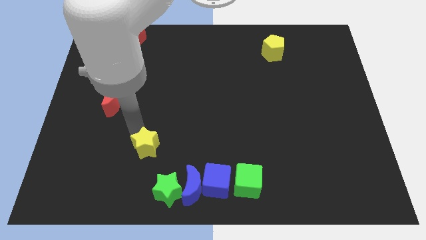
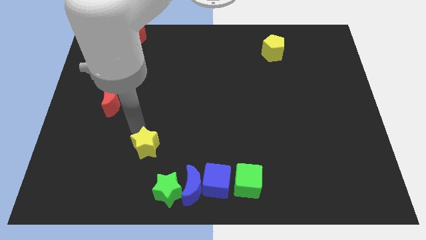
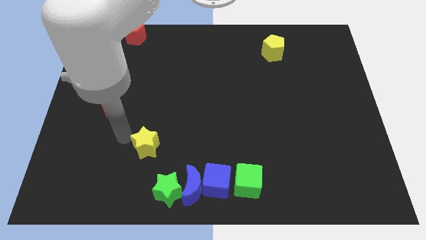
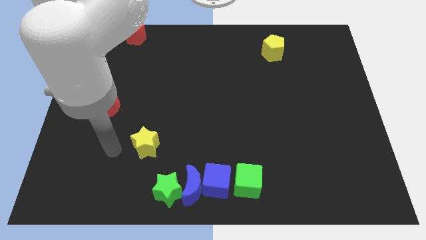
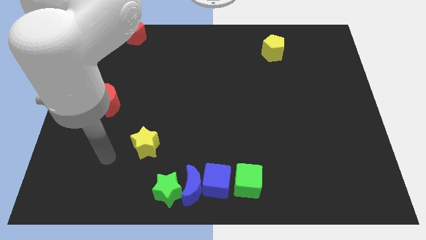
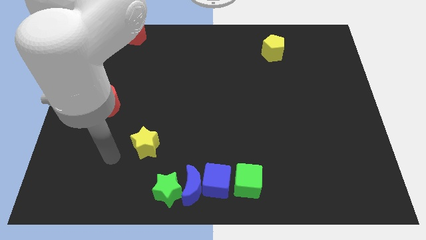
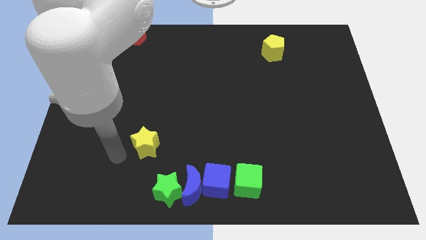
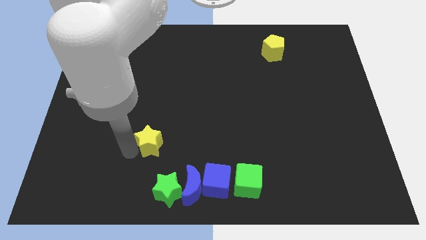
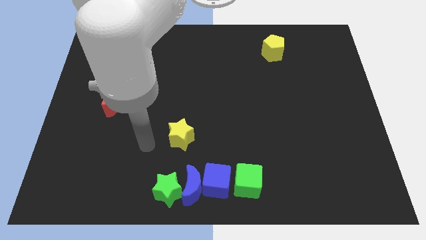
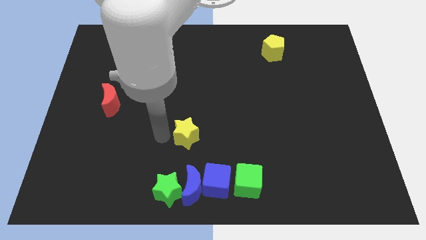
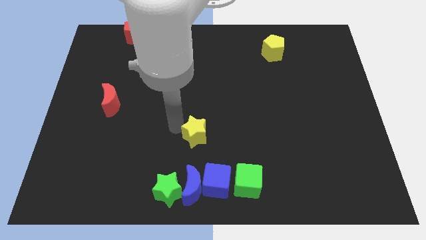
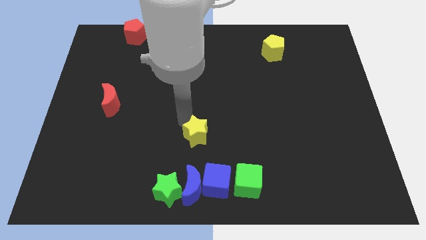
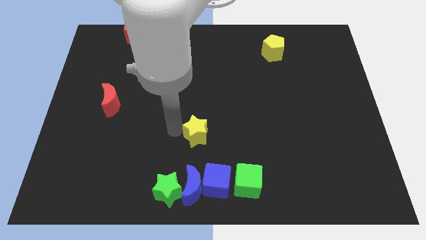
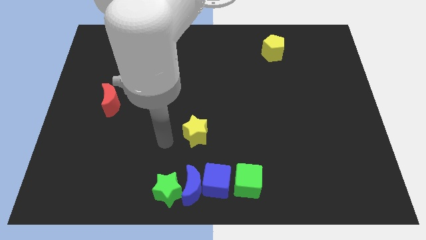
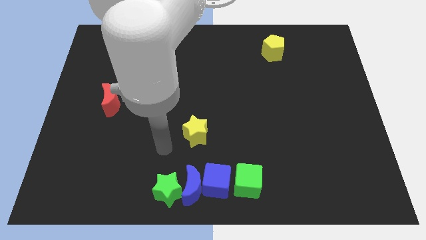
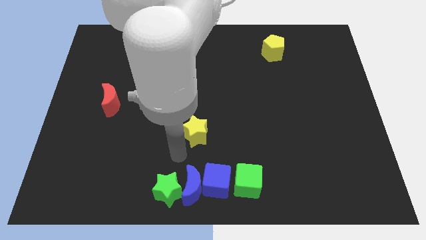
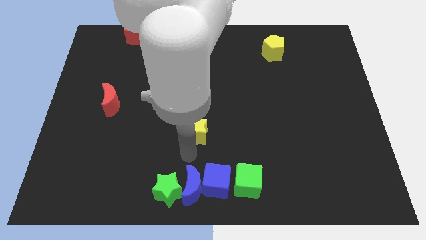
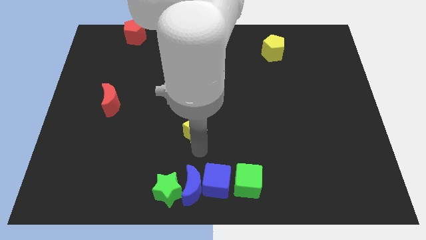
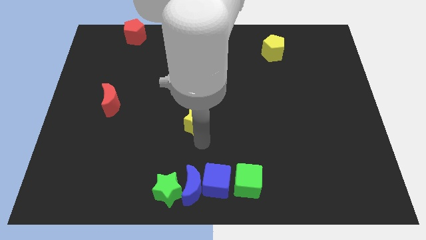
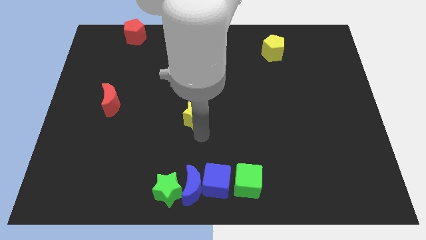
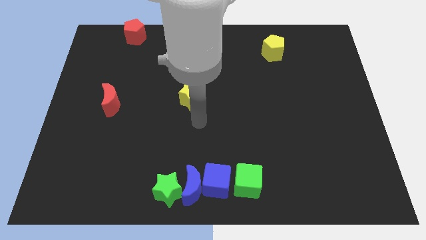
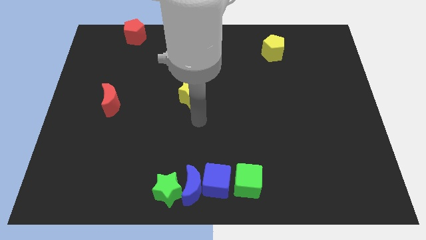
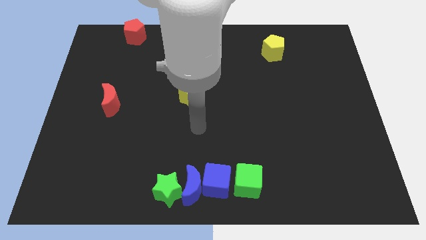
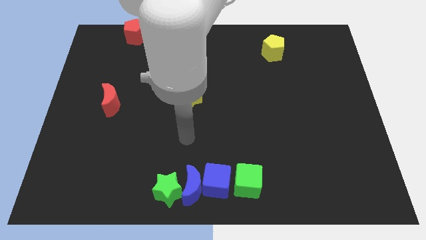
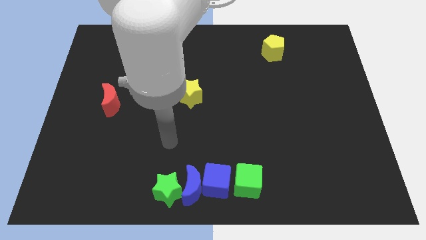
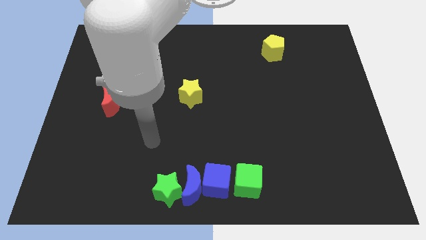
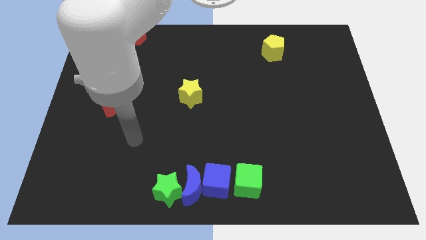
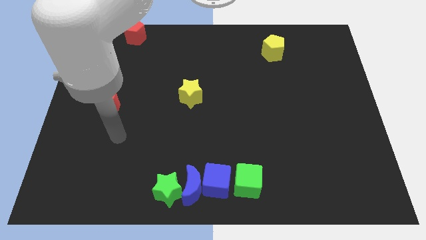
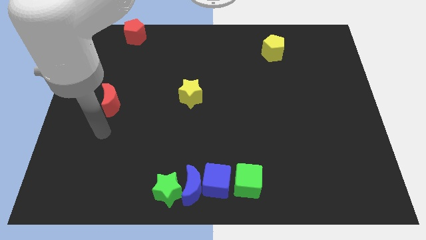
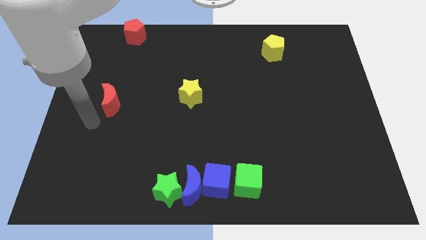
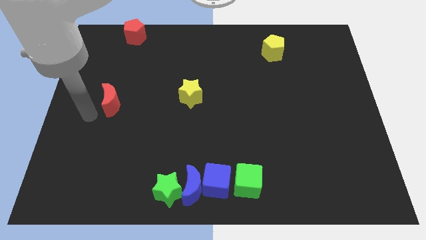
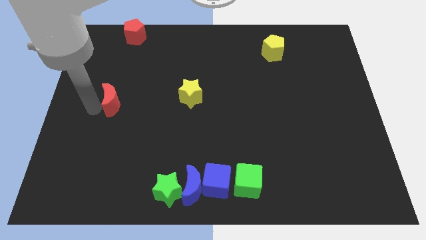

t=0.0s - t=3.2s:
put the yellow star vertically above the blue moon

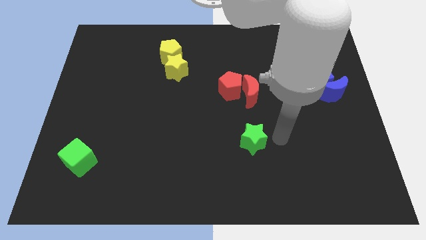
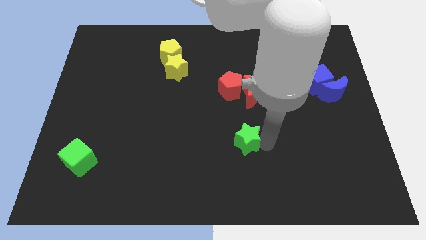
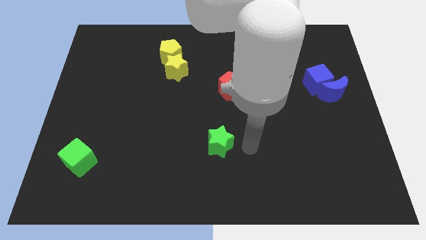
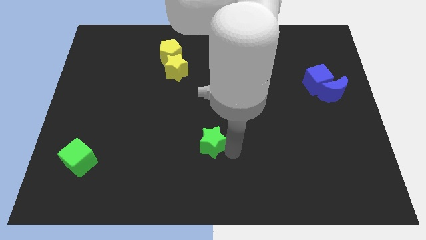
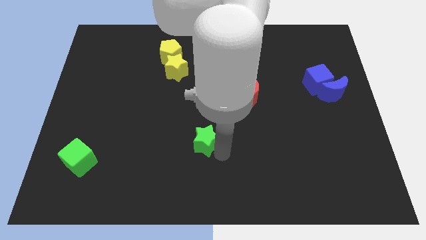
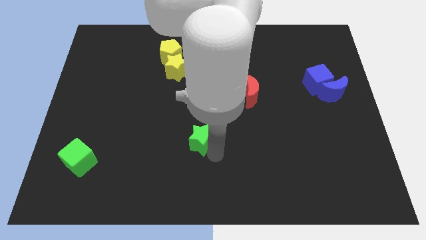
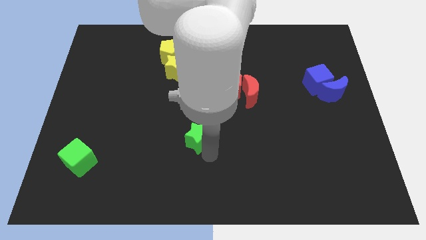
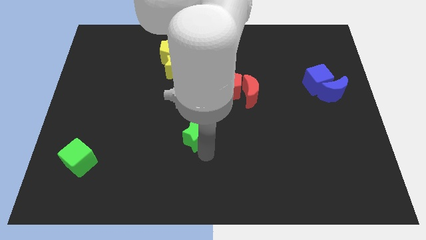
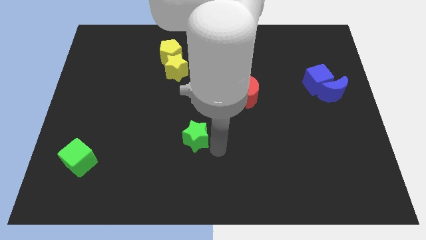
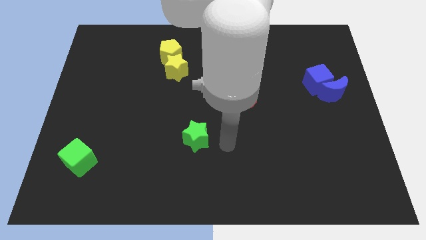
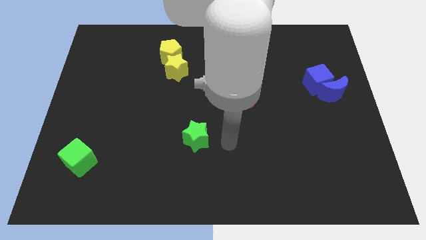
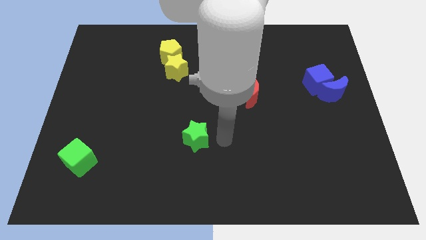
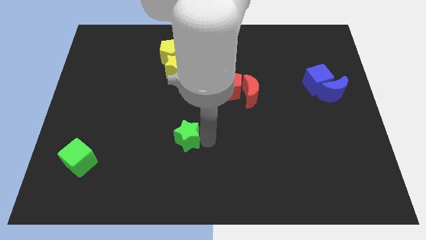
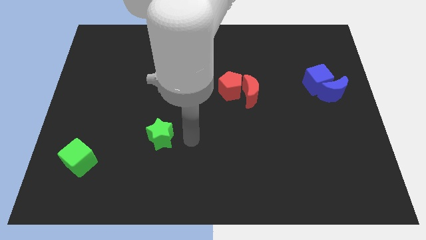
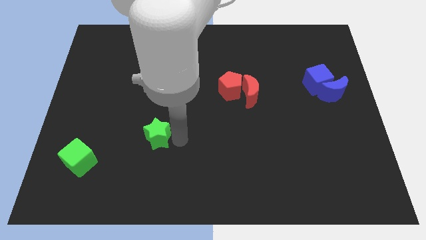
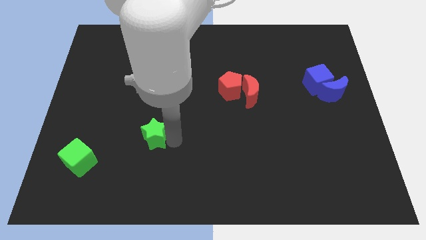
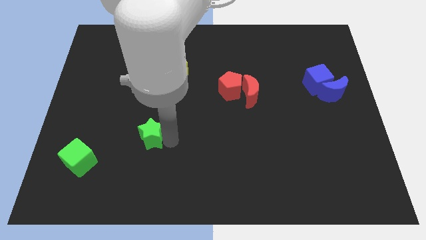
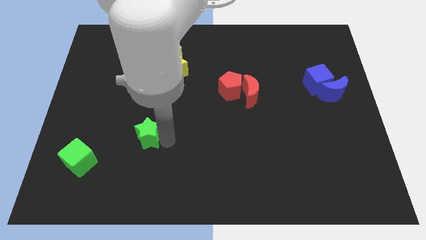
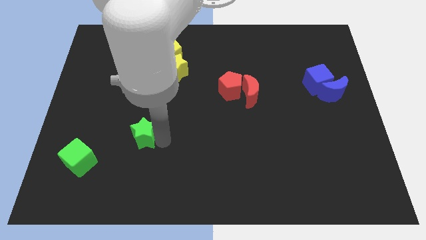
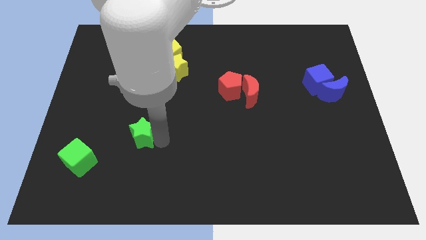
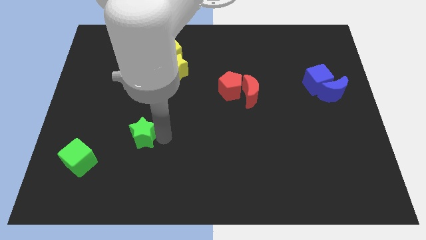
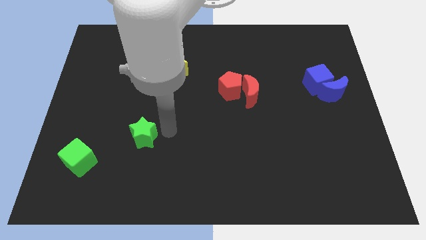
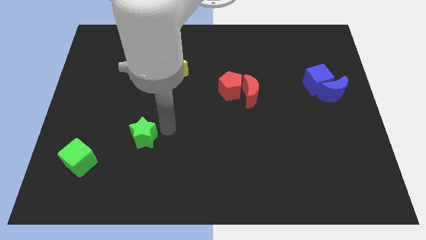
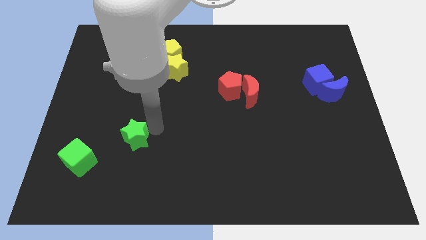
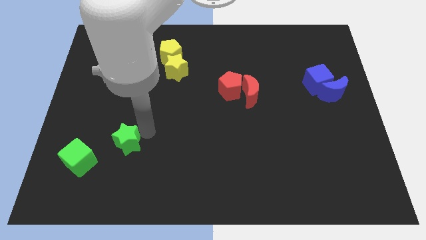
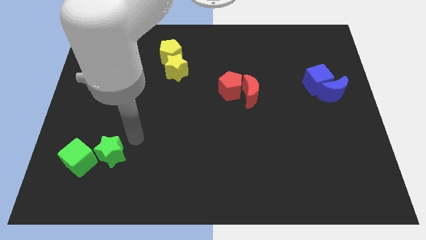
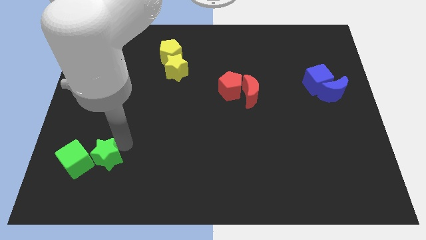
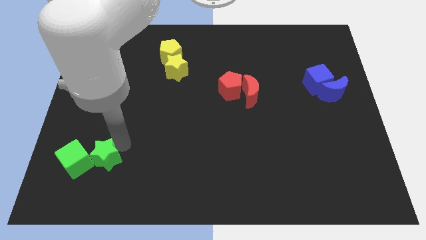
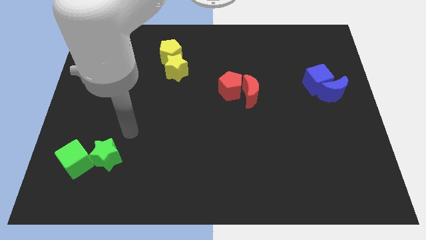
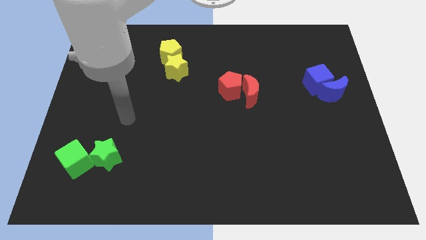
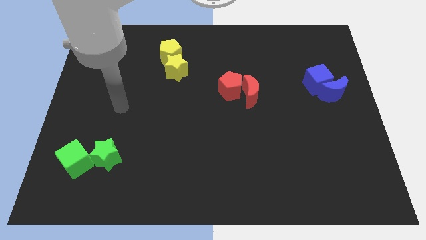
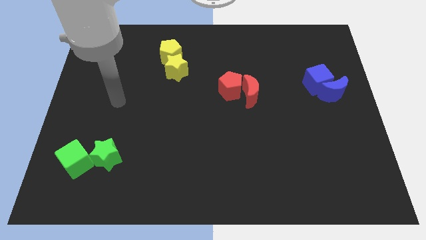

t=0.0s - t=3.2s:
place the green star close to the green cube

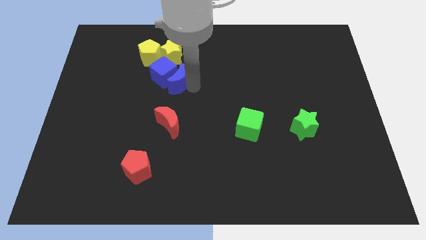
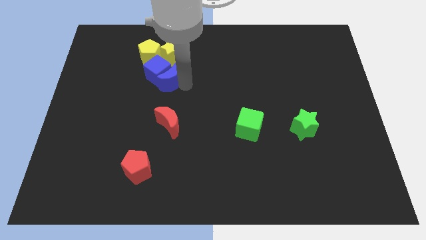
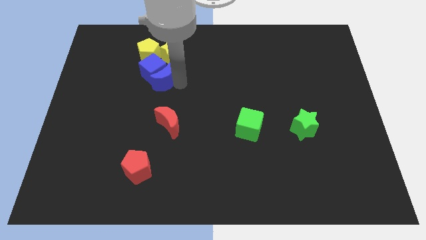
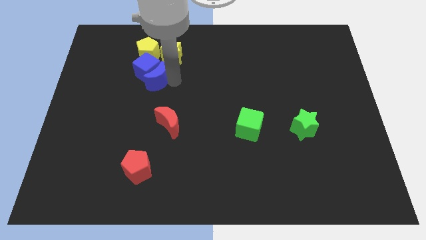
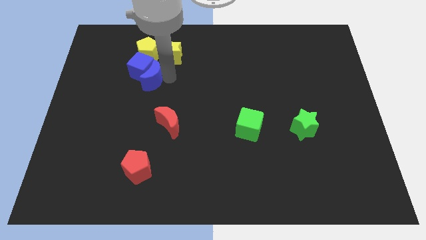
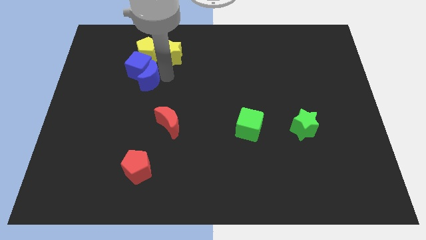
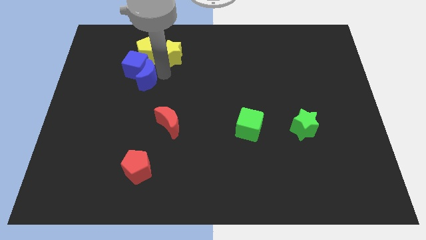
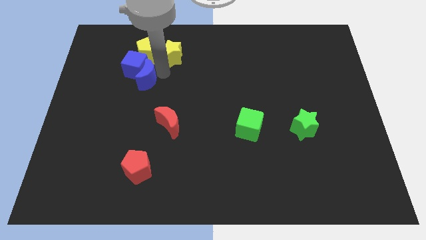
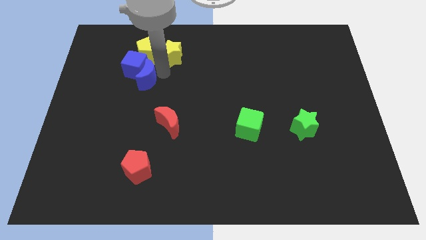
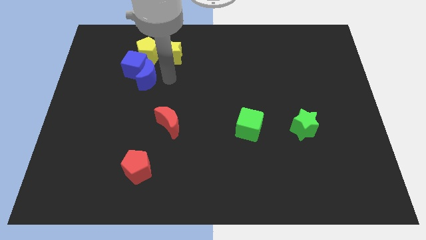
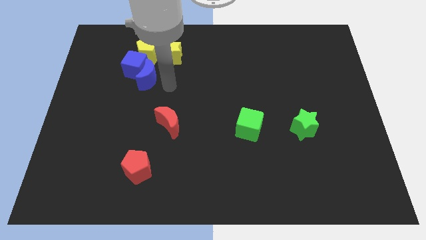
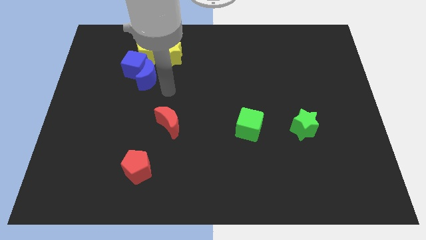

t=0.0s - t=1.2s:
push the blue crescent into the blue cube

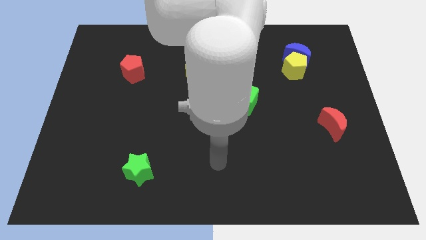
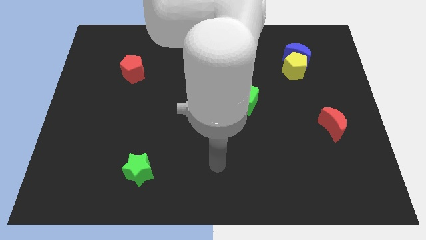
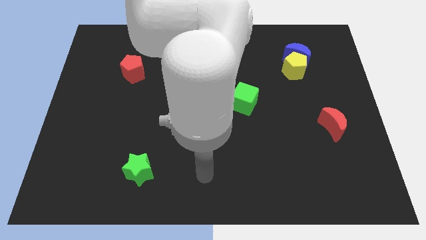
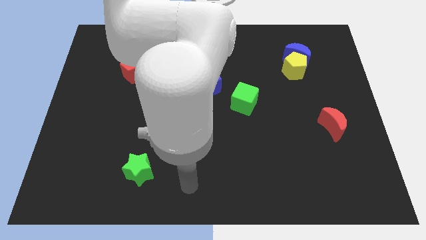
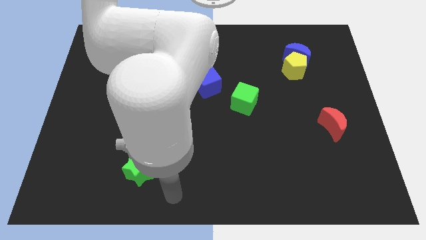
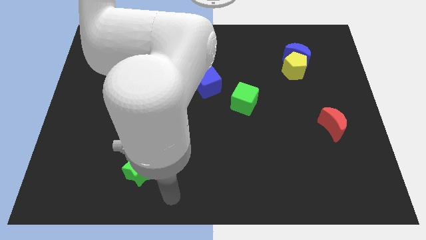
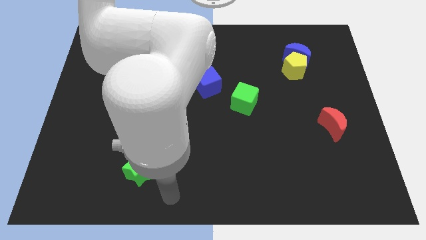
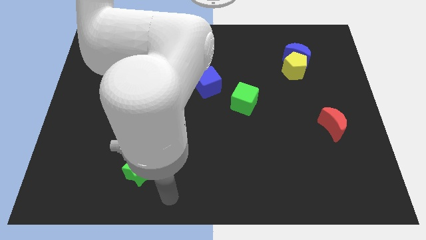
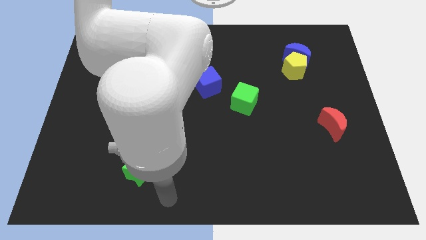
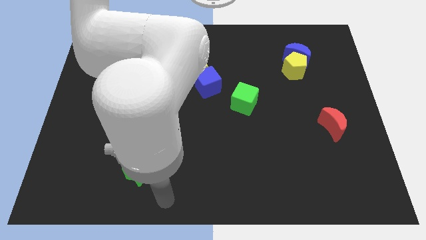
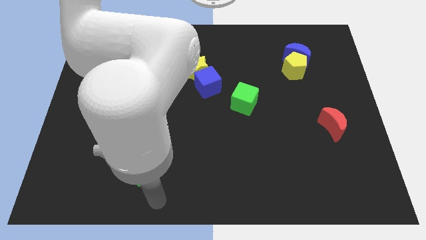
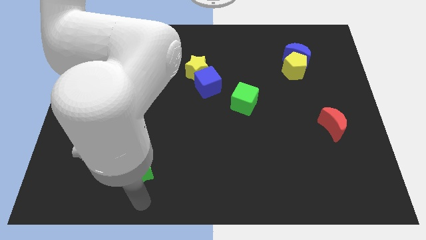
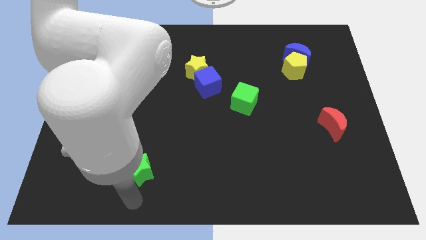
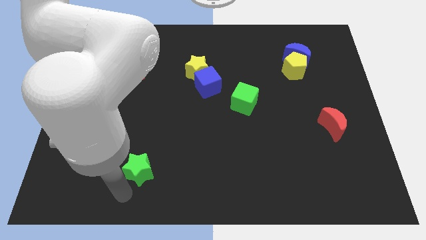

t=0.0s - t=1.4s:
move your arm towards the green star

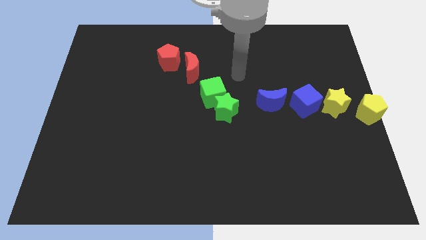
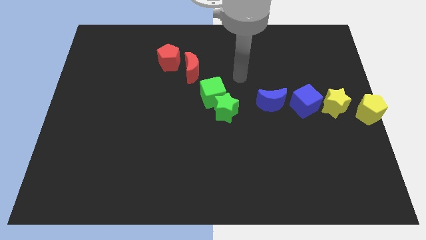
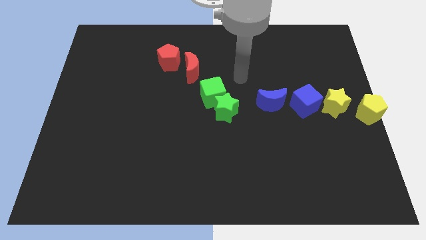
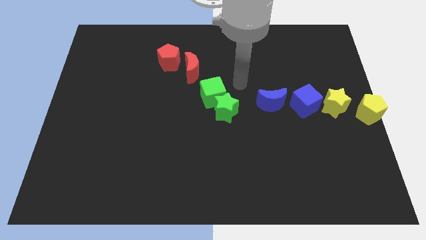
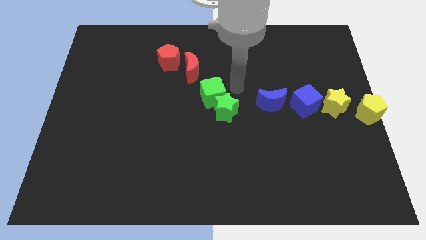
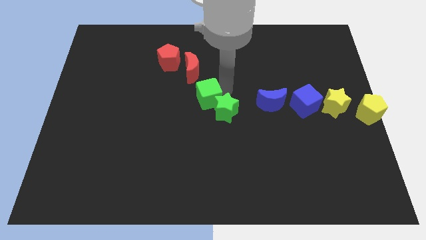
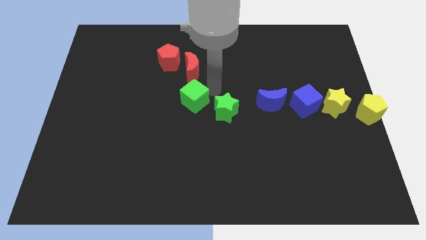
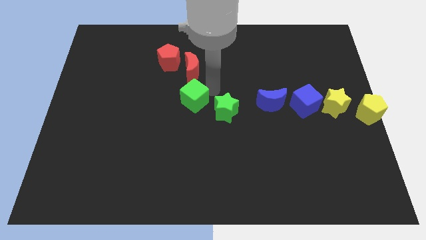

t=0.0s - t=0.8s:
place the green cube below the red moon
